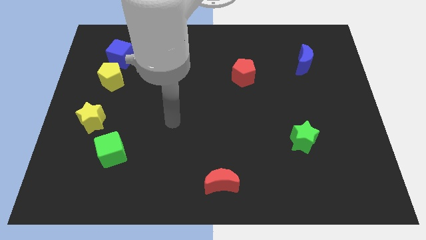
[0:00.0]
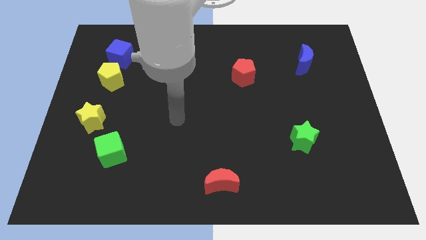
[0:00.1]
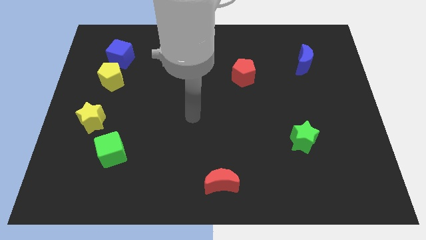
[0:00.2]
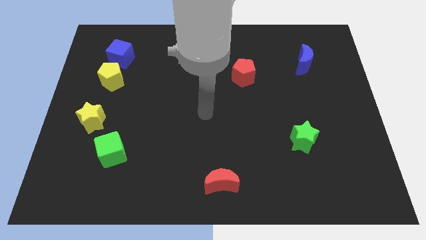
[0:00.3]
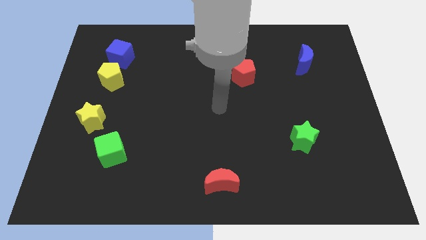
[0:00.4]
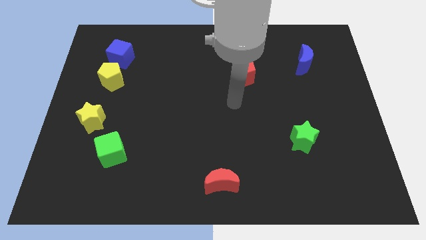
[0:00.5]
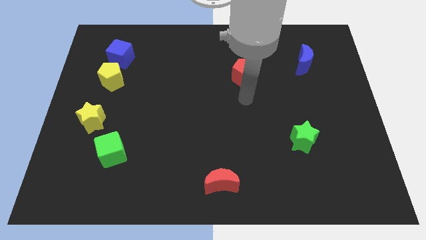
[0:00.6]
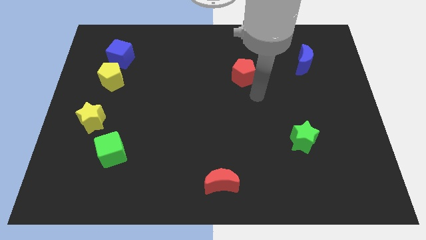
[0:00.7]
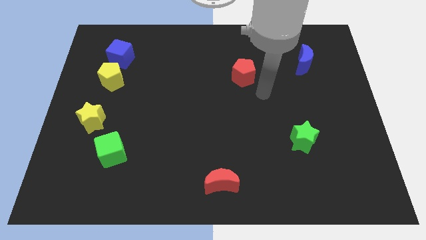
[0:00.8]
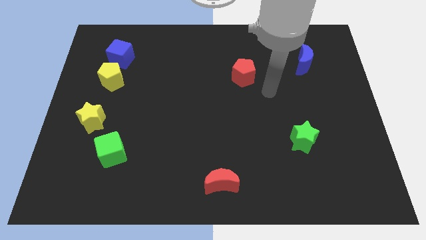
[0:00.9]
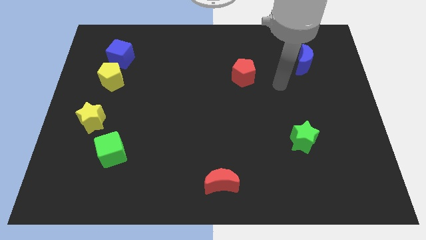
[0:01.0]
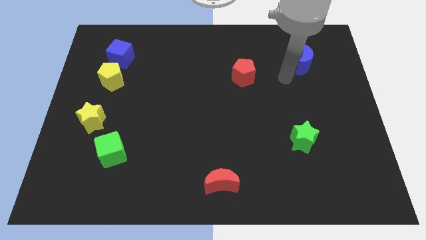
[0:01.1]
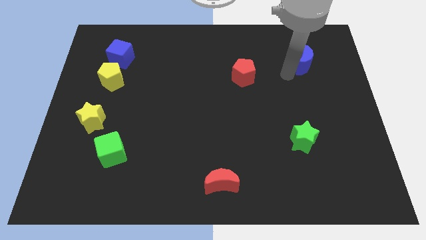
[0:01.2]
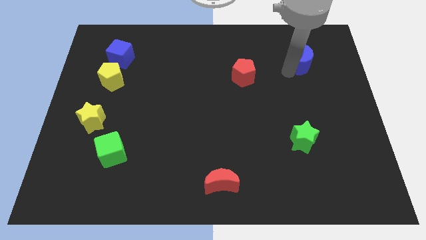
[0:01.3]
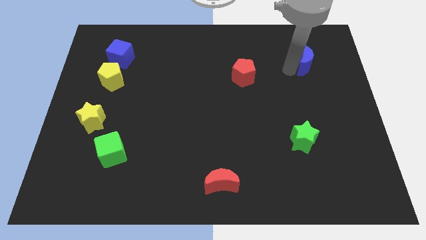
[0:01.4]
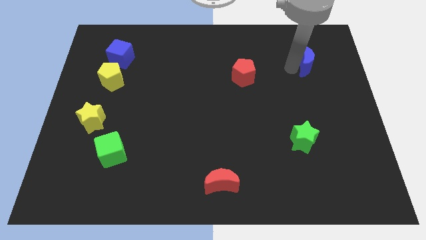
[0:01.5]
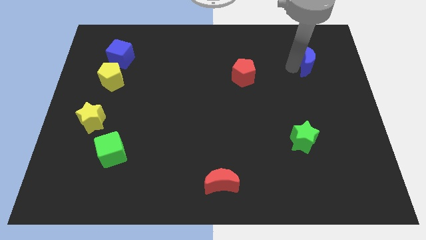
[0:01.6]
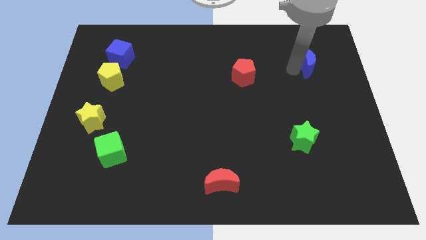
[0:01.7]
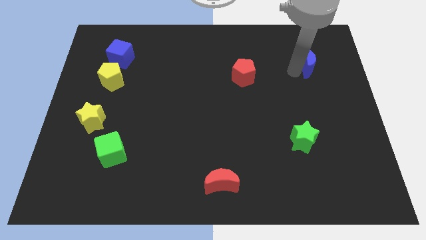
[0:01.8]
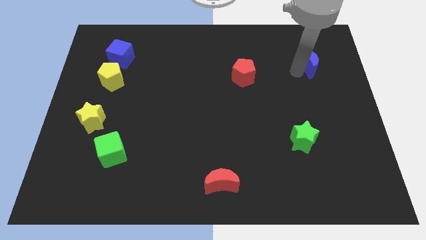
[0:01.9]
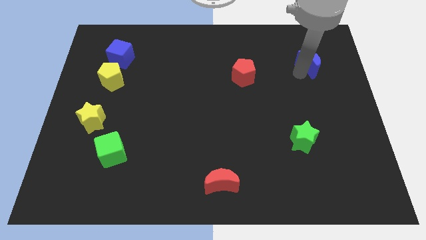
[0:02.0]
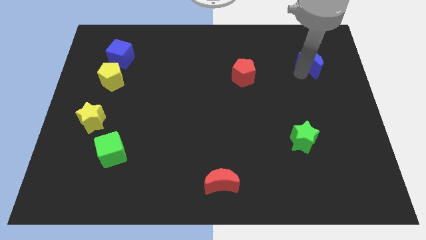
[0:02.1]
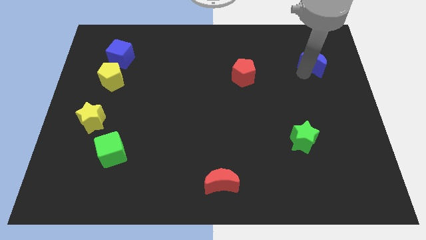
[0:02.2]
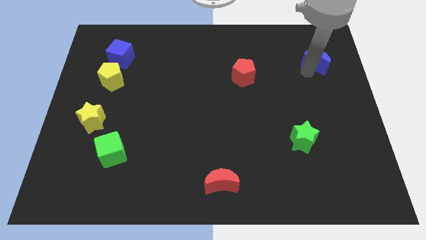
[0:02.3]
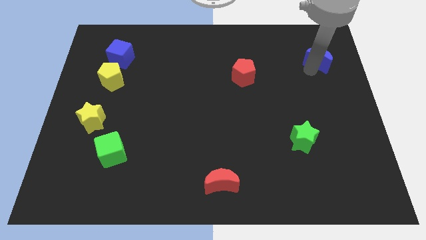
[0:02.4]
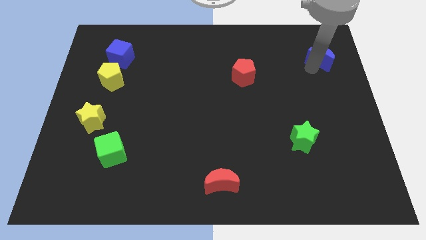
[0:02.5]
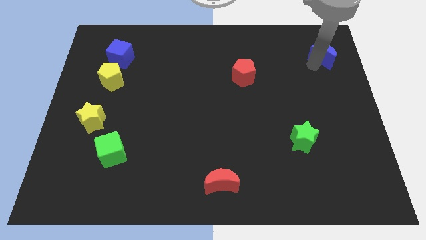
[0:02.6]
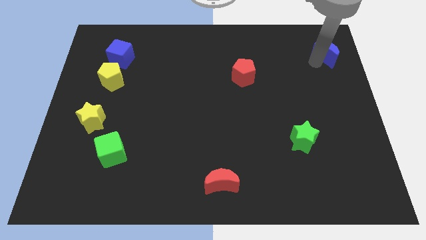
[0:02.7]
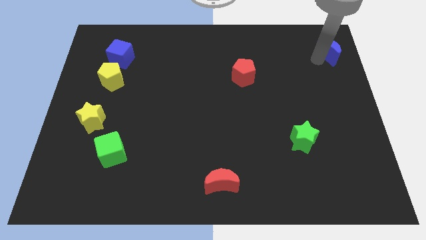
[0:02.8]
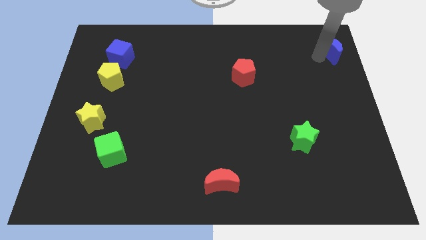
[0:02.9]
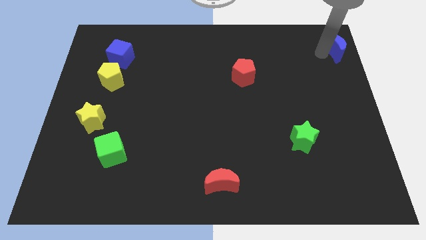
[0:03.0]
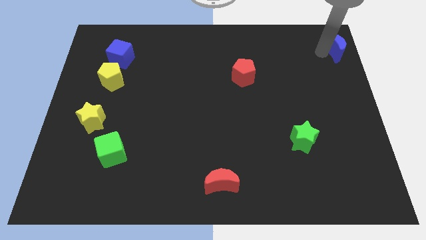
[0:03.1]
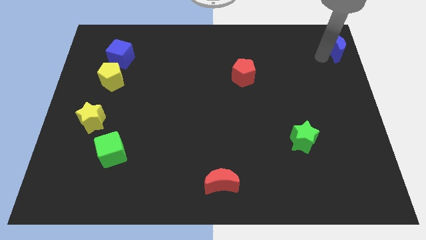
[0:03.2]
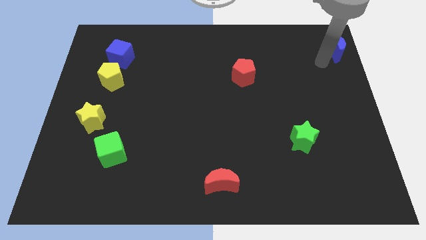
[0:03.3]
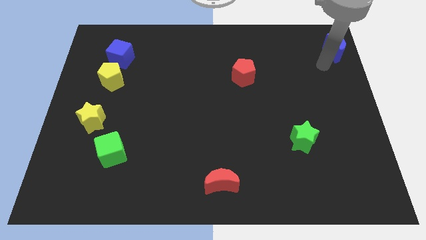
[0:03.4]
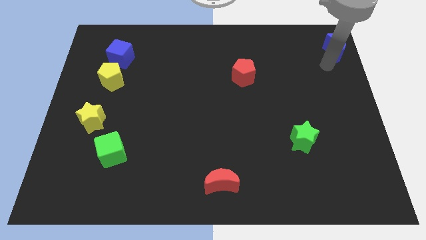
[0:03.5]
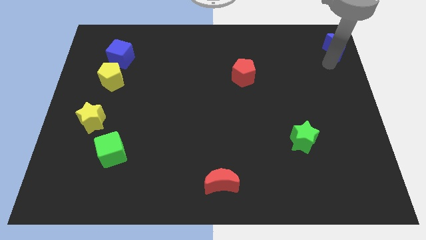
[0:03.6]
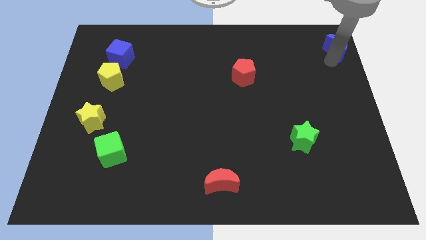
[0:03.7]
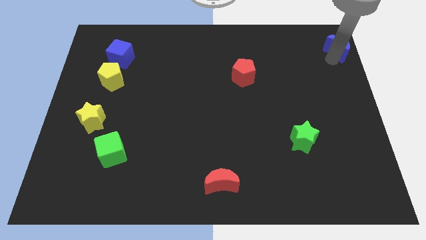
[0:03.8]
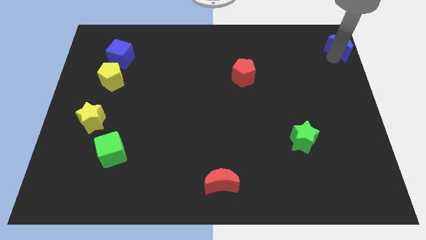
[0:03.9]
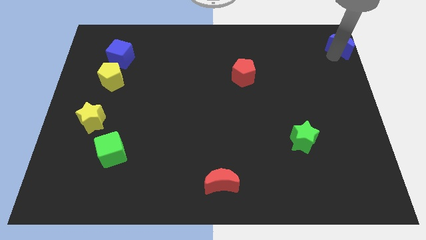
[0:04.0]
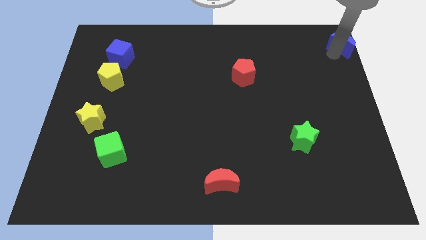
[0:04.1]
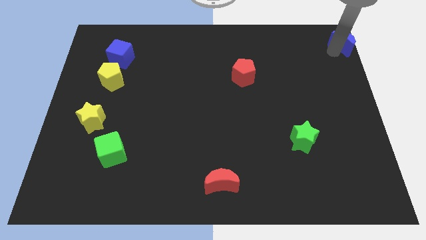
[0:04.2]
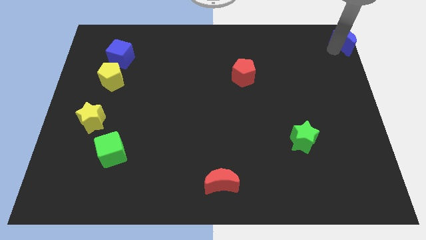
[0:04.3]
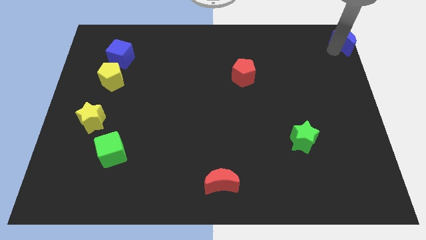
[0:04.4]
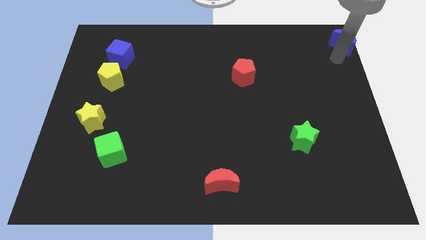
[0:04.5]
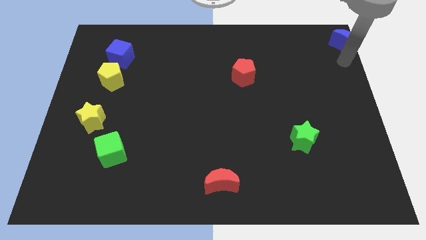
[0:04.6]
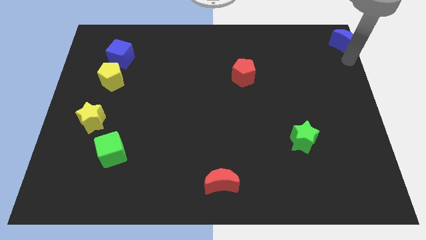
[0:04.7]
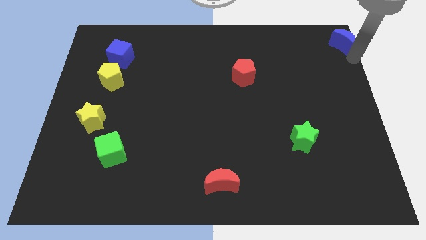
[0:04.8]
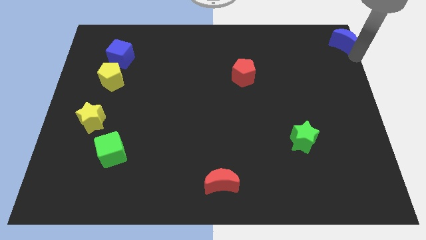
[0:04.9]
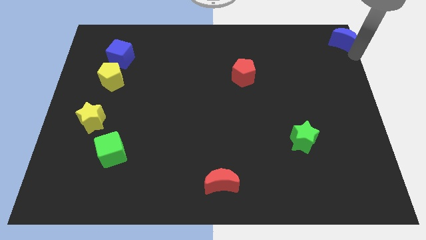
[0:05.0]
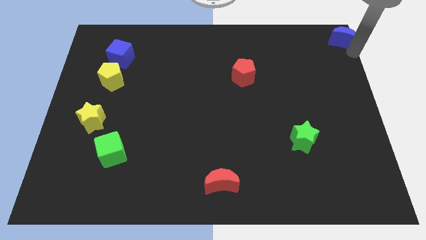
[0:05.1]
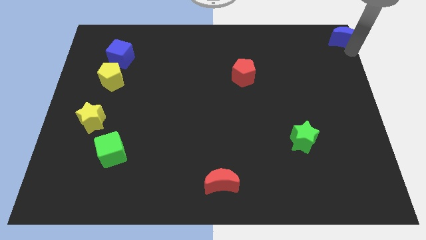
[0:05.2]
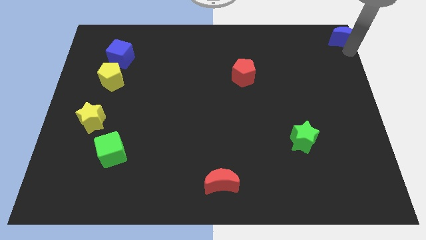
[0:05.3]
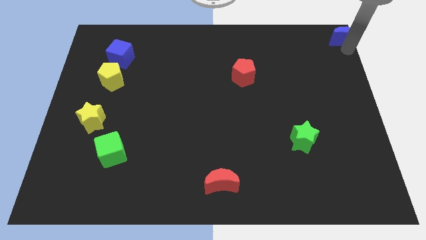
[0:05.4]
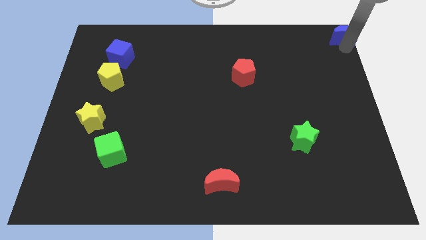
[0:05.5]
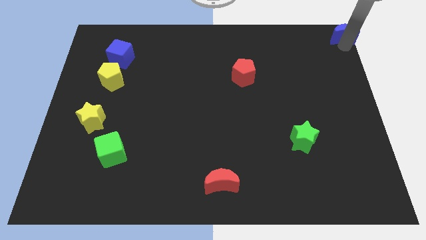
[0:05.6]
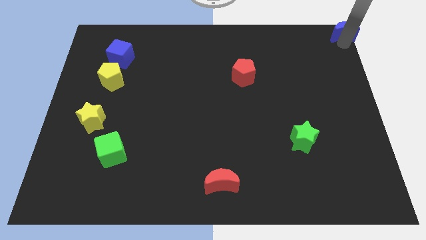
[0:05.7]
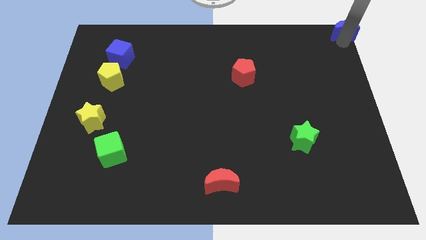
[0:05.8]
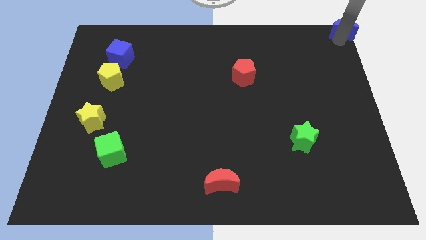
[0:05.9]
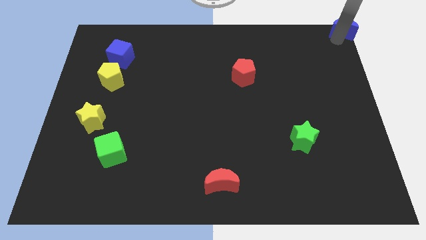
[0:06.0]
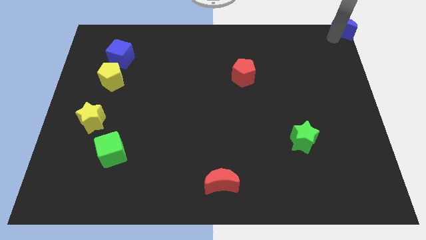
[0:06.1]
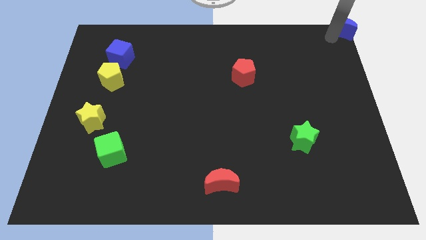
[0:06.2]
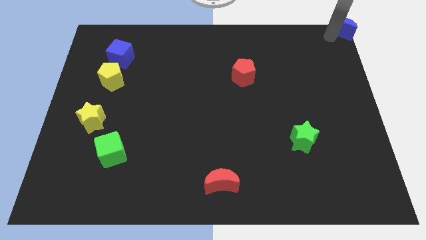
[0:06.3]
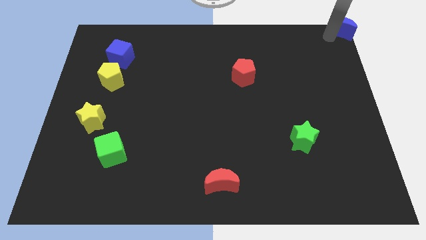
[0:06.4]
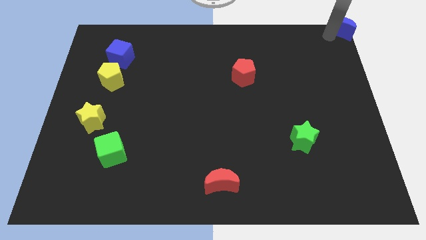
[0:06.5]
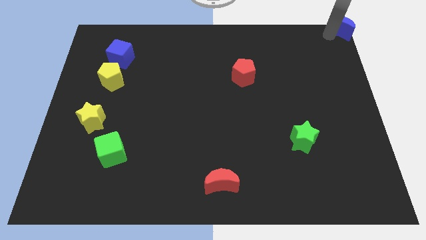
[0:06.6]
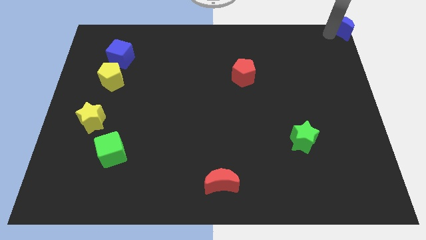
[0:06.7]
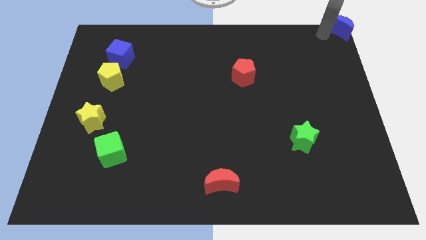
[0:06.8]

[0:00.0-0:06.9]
move the blue moon to the top right

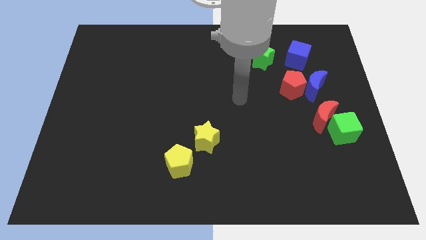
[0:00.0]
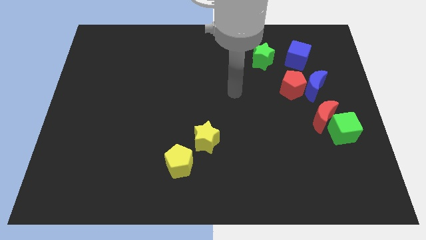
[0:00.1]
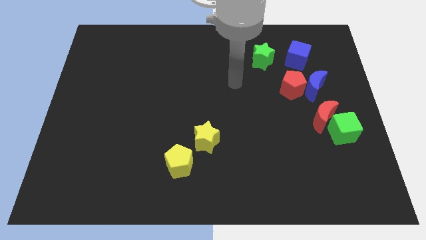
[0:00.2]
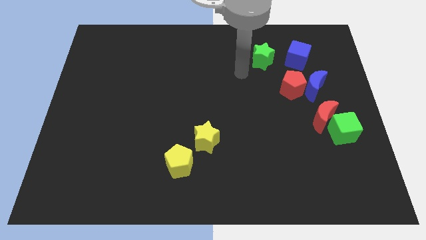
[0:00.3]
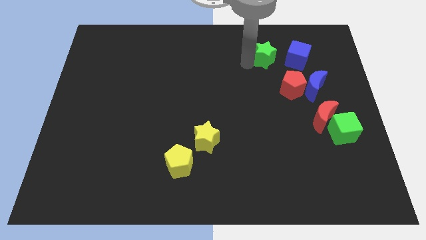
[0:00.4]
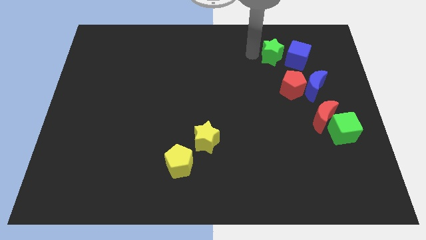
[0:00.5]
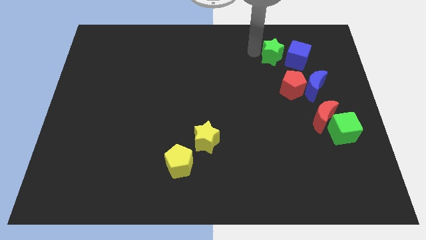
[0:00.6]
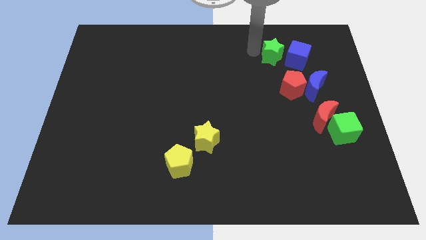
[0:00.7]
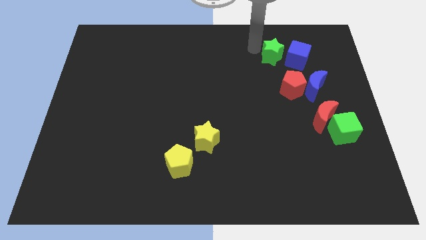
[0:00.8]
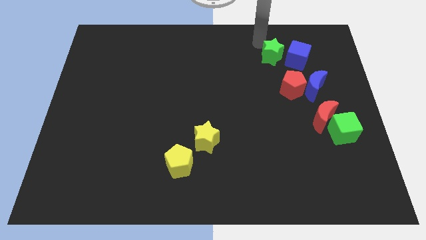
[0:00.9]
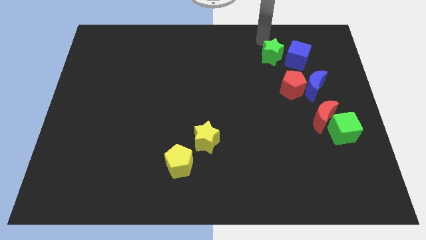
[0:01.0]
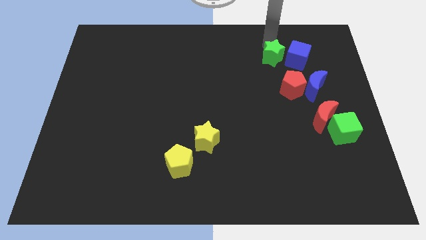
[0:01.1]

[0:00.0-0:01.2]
slightly move the green star to the left of the blue cube

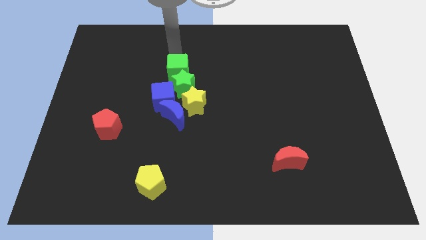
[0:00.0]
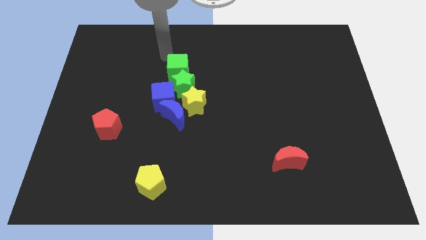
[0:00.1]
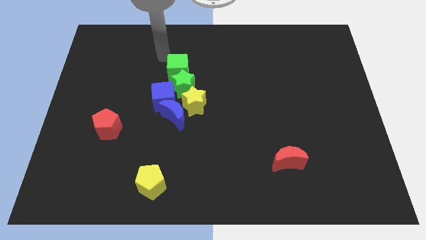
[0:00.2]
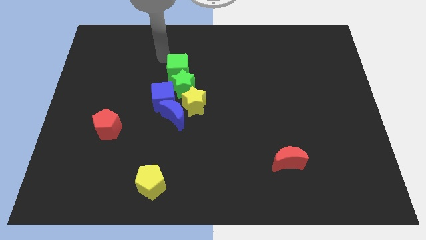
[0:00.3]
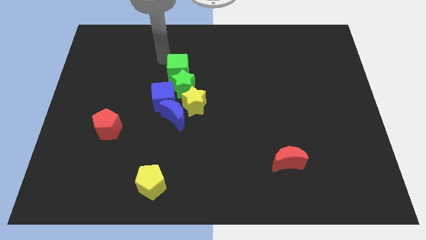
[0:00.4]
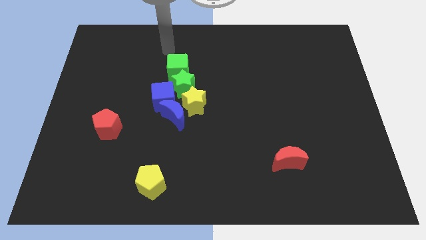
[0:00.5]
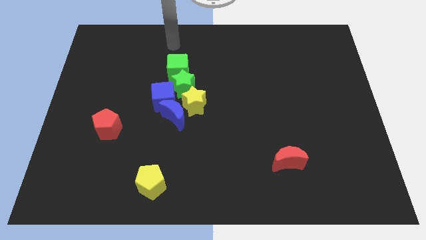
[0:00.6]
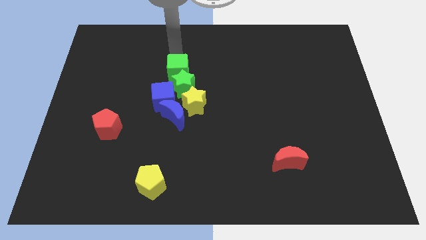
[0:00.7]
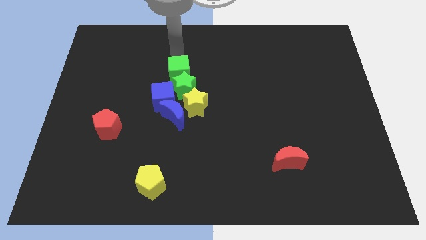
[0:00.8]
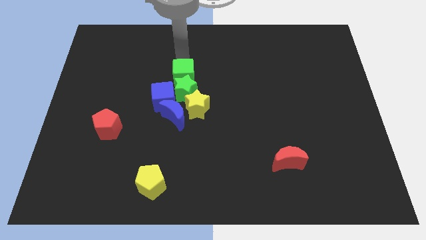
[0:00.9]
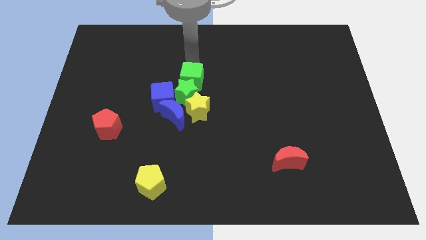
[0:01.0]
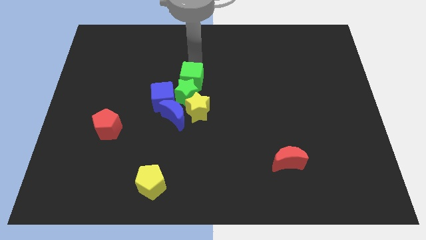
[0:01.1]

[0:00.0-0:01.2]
push the green cube into the green star
